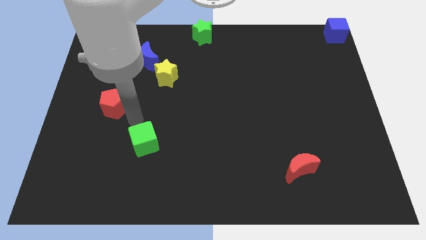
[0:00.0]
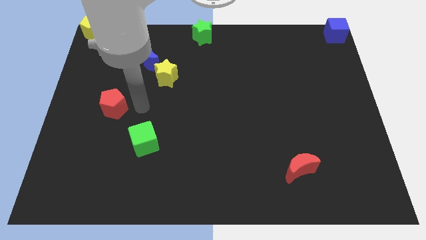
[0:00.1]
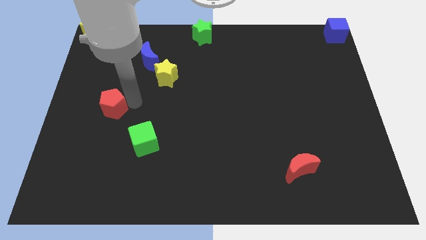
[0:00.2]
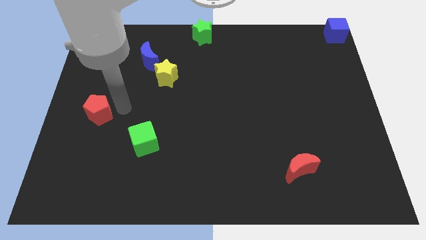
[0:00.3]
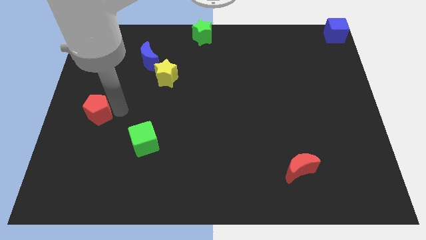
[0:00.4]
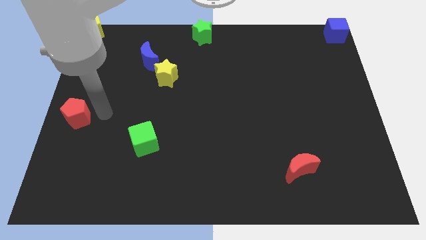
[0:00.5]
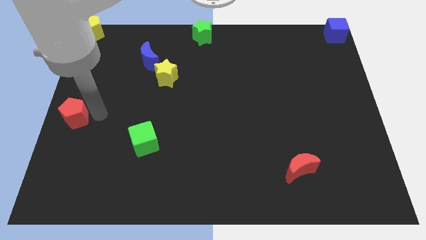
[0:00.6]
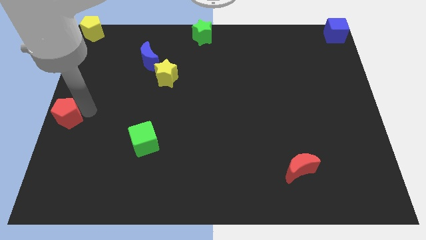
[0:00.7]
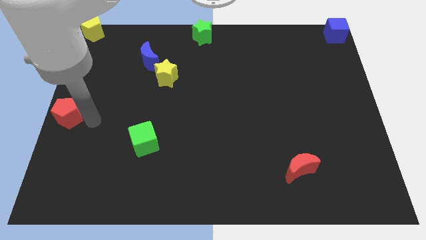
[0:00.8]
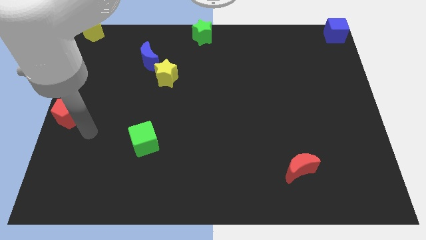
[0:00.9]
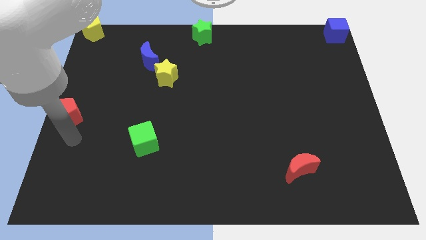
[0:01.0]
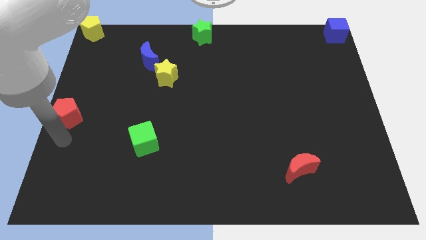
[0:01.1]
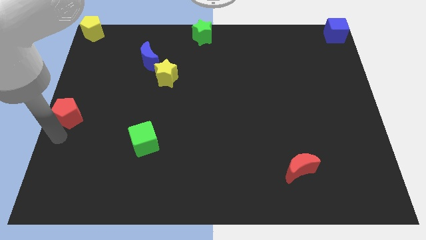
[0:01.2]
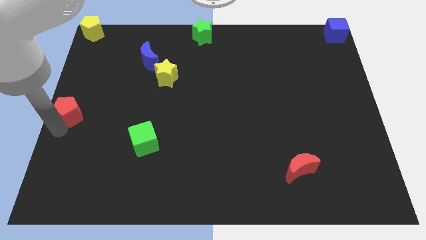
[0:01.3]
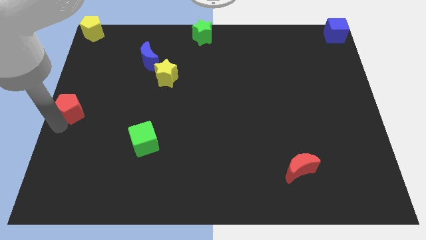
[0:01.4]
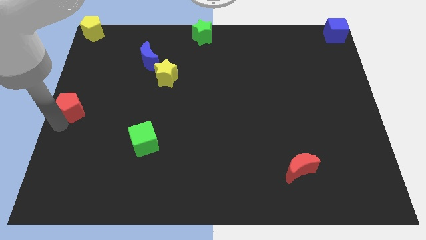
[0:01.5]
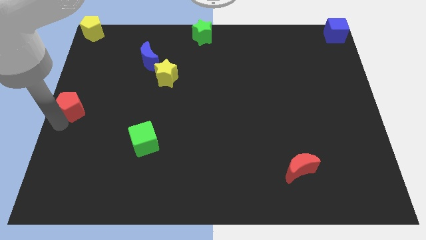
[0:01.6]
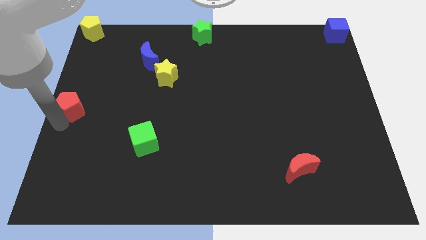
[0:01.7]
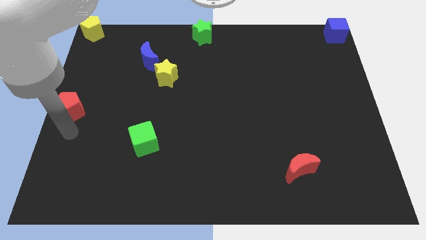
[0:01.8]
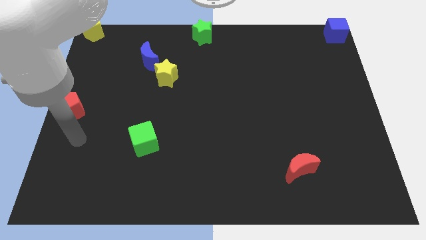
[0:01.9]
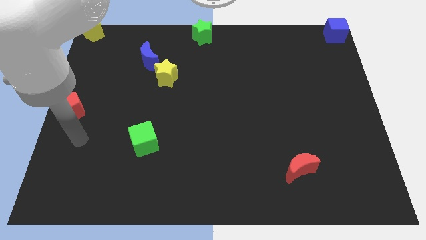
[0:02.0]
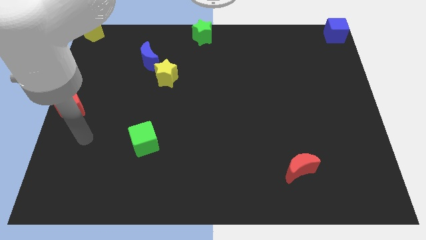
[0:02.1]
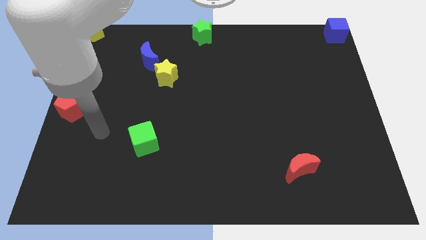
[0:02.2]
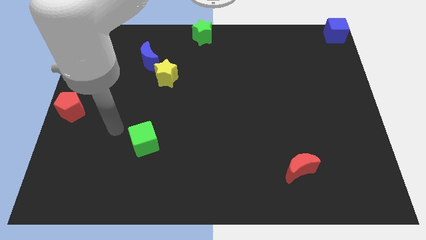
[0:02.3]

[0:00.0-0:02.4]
move red pentagon to the middle of left corner of the board

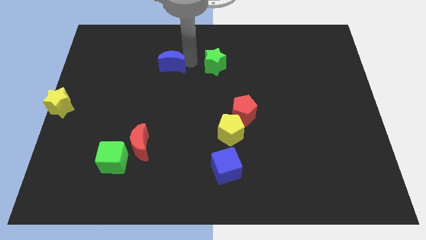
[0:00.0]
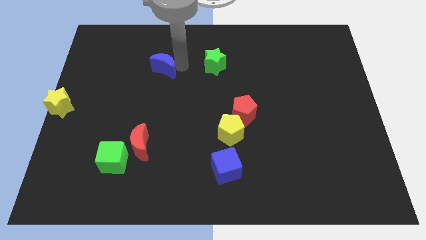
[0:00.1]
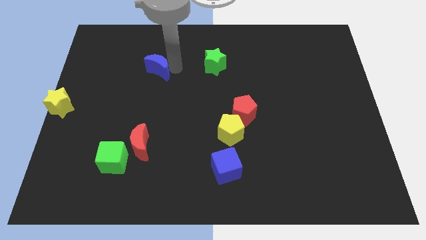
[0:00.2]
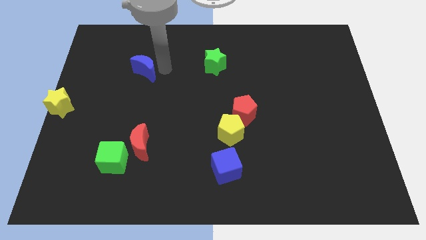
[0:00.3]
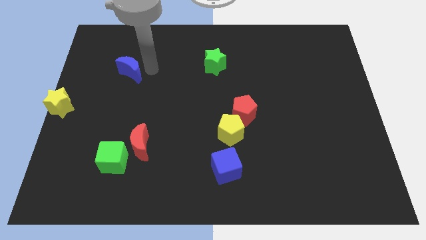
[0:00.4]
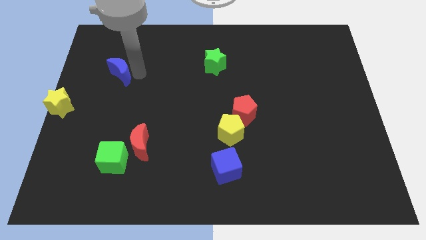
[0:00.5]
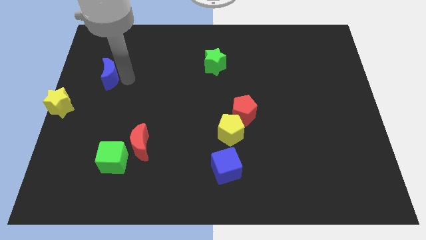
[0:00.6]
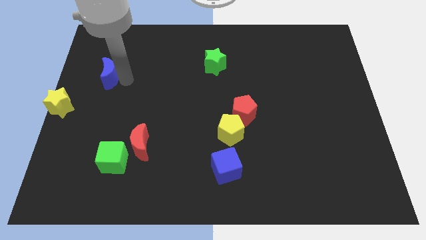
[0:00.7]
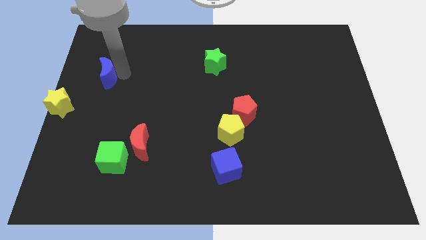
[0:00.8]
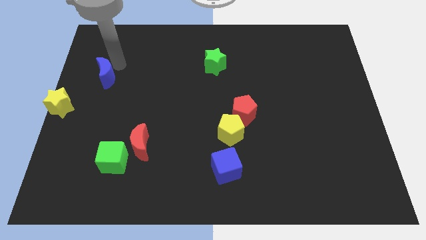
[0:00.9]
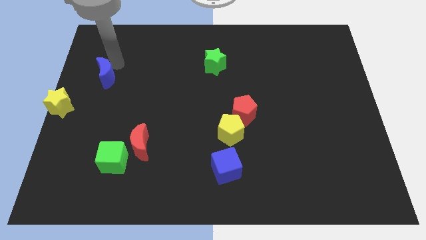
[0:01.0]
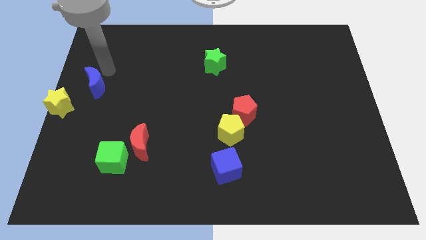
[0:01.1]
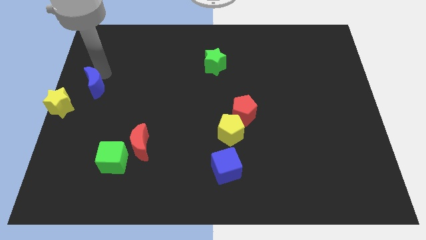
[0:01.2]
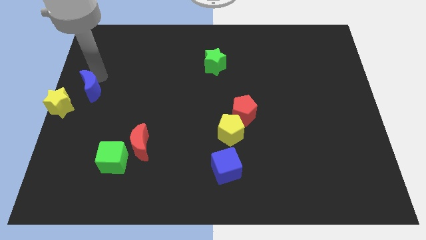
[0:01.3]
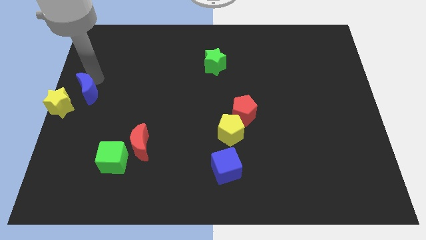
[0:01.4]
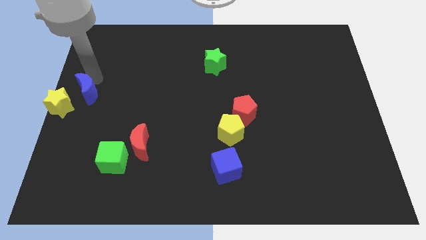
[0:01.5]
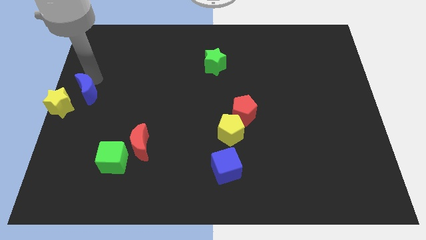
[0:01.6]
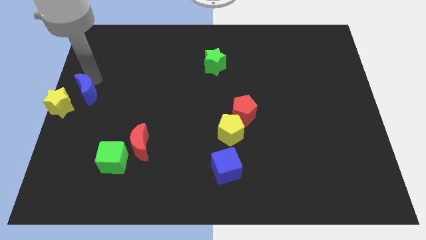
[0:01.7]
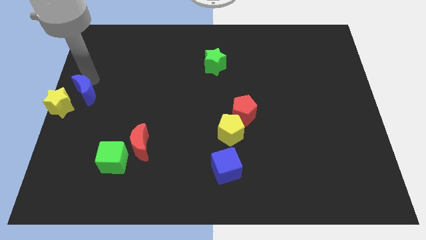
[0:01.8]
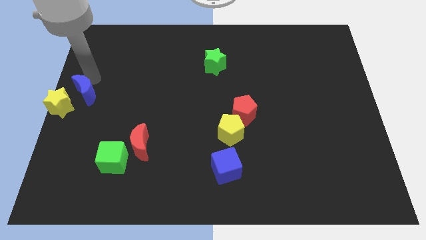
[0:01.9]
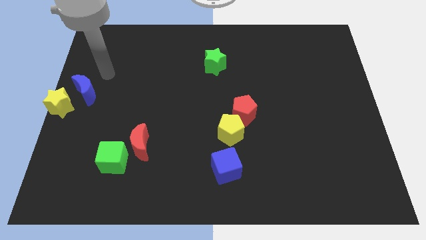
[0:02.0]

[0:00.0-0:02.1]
push the blue crescent towards the center left corner of the board

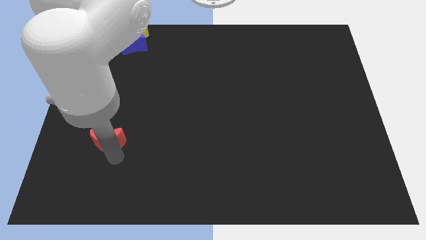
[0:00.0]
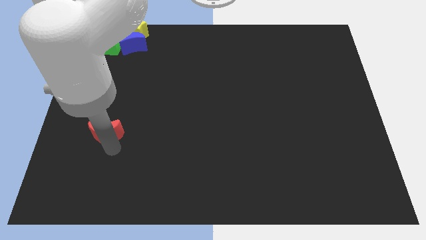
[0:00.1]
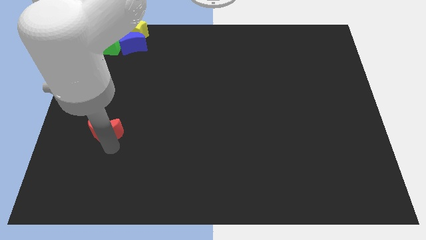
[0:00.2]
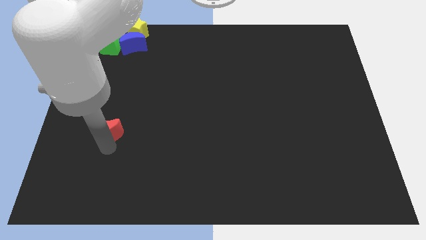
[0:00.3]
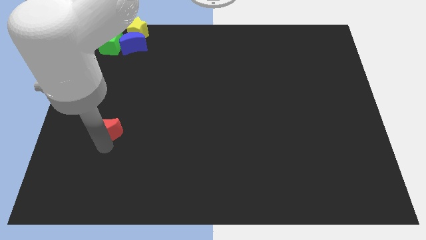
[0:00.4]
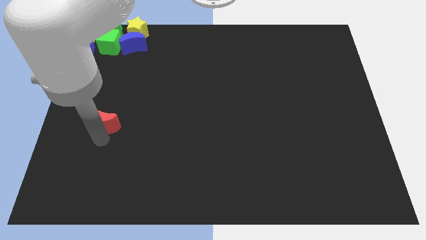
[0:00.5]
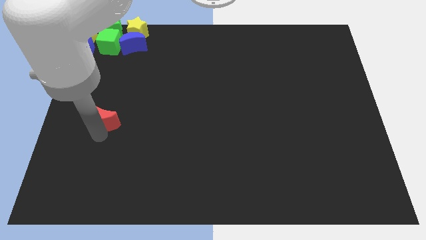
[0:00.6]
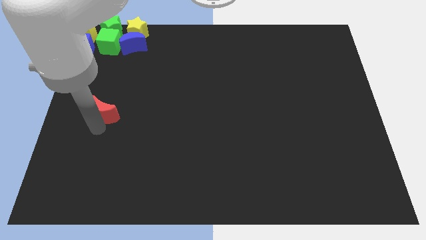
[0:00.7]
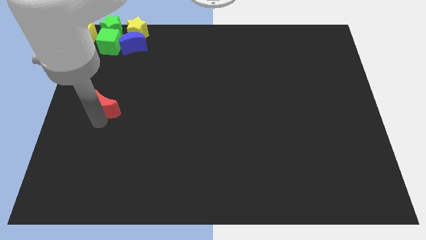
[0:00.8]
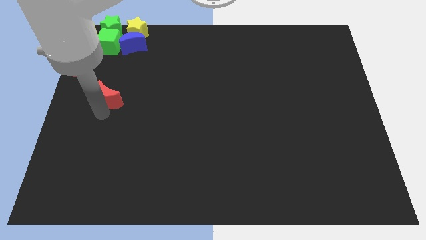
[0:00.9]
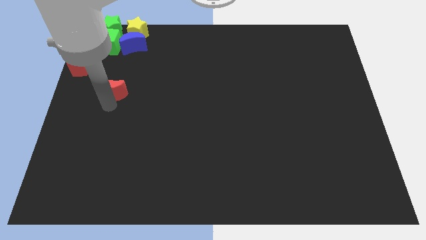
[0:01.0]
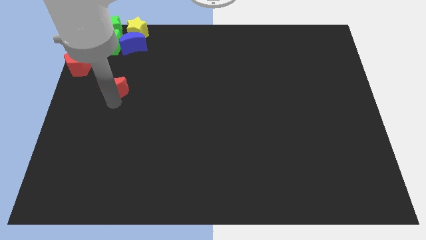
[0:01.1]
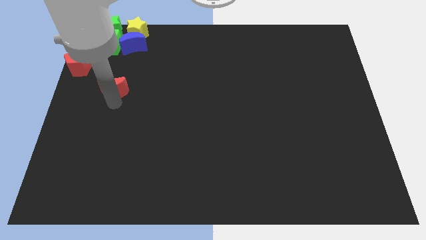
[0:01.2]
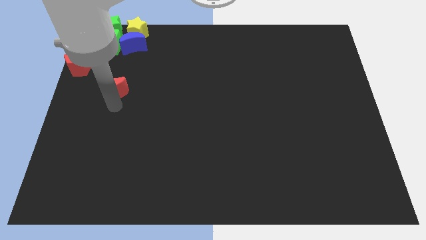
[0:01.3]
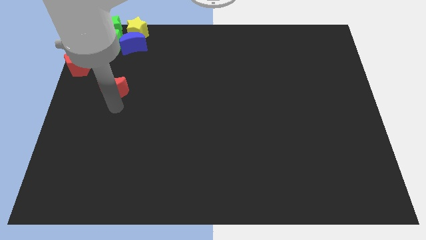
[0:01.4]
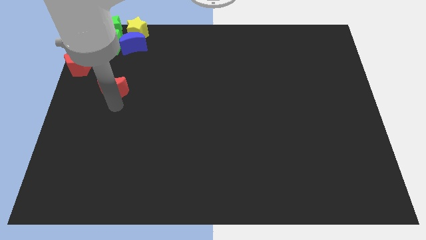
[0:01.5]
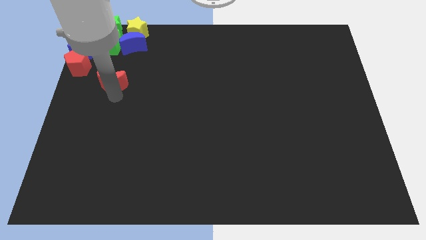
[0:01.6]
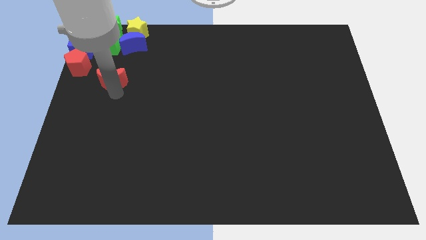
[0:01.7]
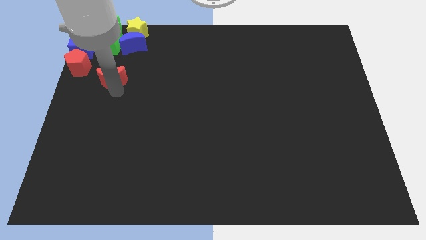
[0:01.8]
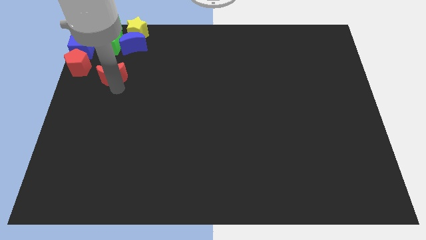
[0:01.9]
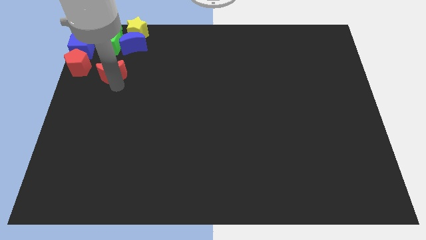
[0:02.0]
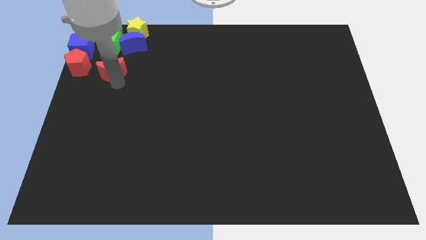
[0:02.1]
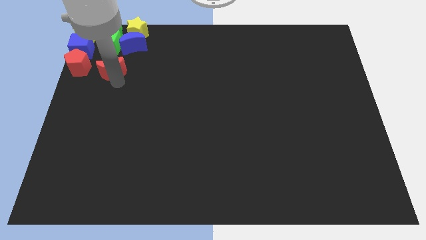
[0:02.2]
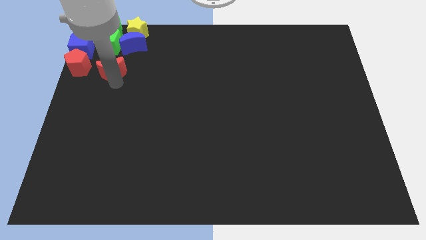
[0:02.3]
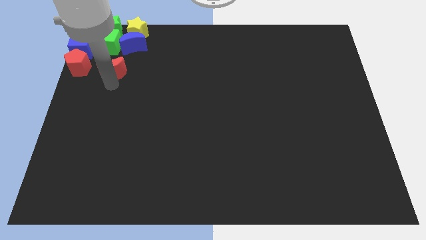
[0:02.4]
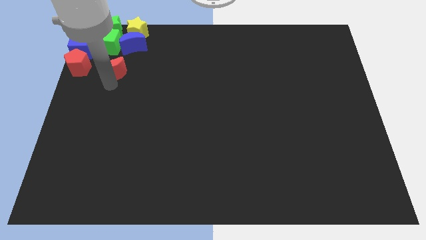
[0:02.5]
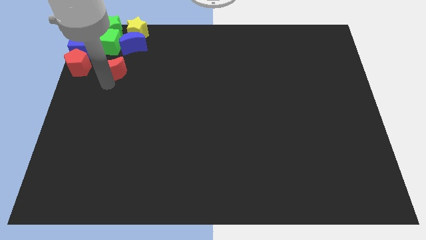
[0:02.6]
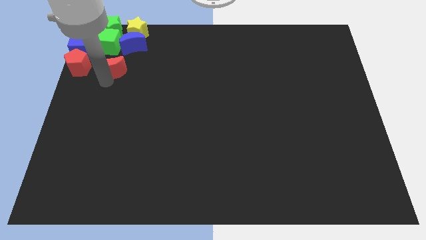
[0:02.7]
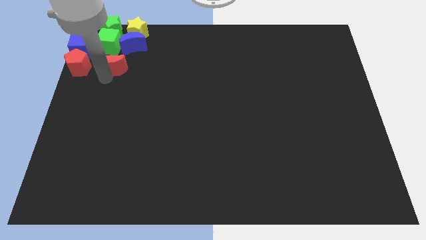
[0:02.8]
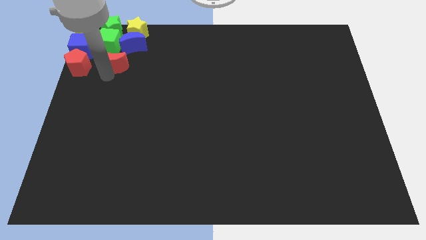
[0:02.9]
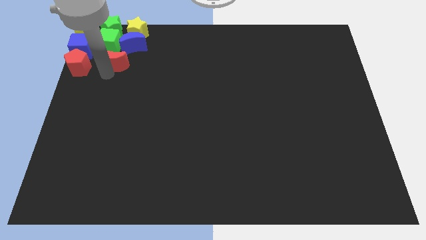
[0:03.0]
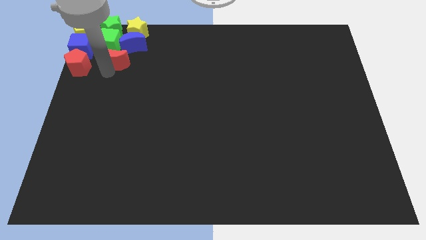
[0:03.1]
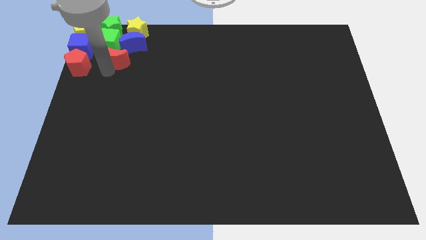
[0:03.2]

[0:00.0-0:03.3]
push the red crescent to the bottom right to the green cube

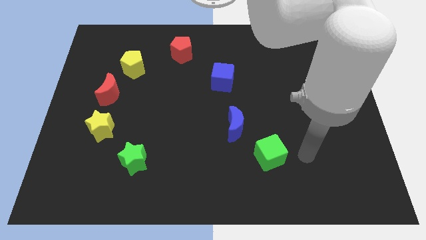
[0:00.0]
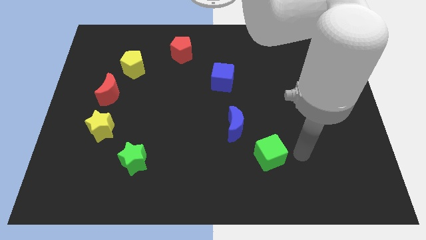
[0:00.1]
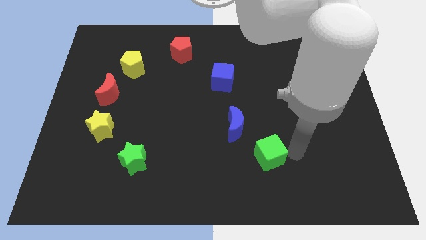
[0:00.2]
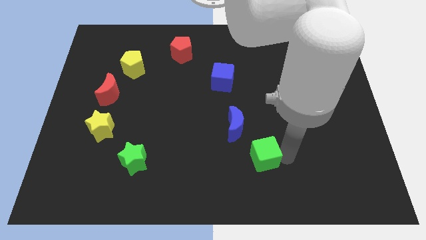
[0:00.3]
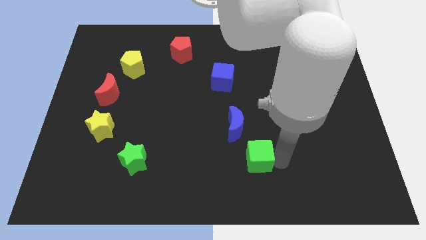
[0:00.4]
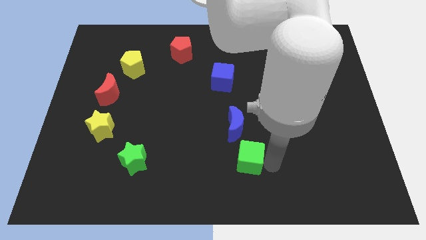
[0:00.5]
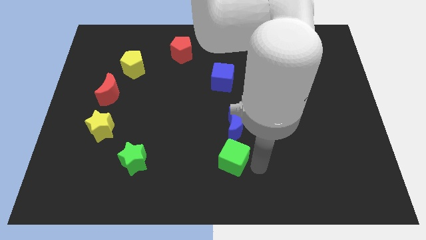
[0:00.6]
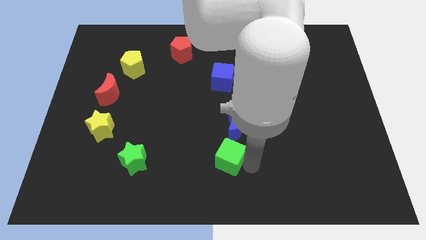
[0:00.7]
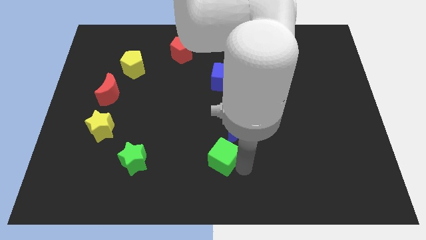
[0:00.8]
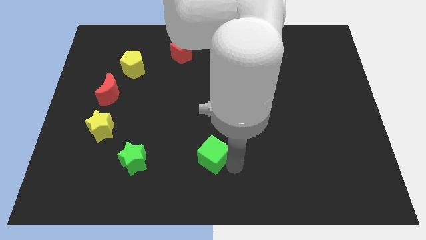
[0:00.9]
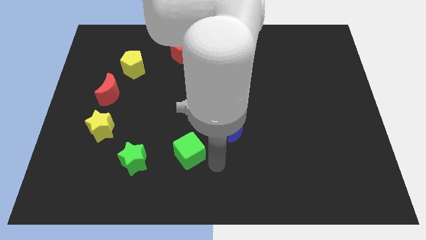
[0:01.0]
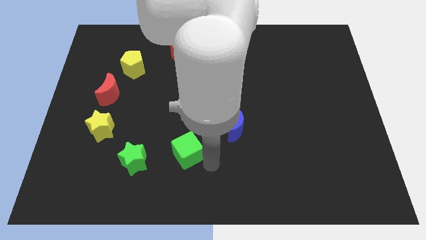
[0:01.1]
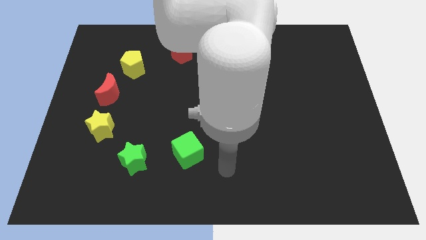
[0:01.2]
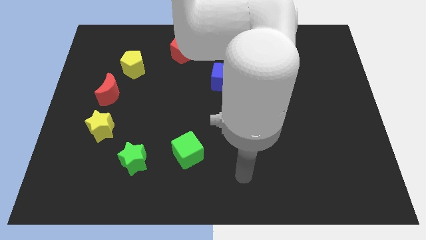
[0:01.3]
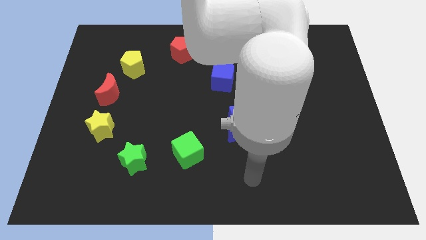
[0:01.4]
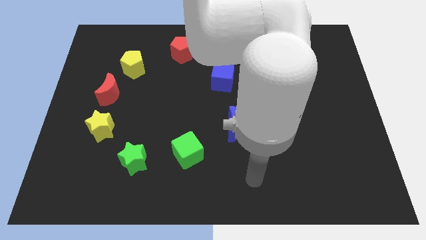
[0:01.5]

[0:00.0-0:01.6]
place green cube in between the blue moon and green star
